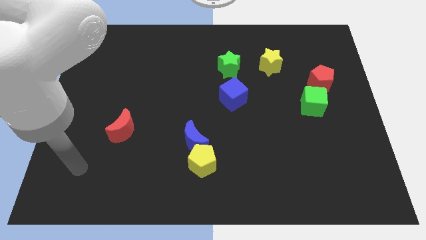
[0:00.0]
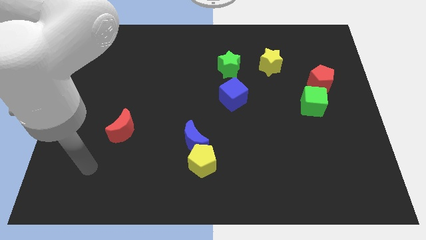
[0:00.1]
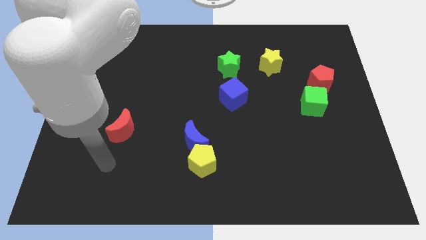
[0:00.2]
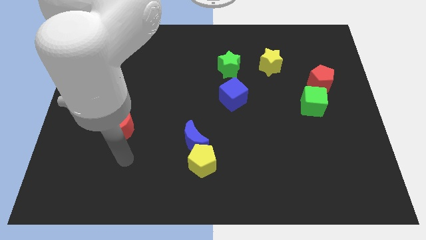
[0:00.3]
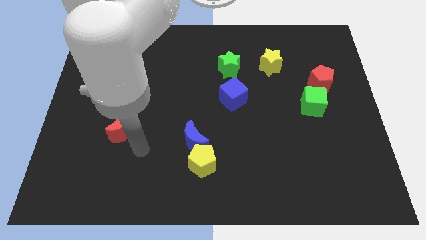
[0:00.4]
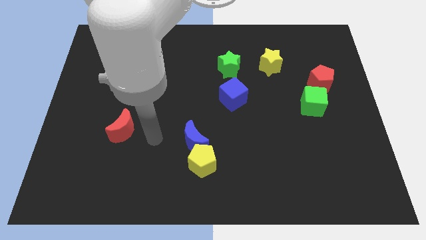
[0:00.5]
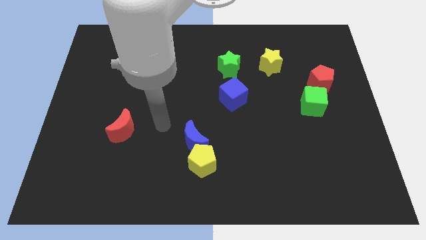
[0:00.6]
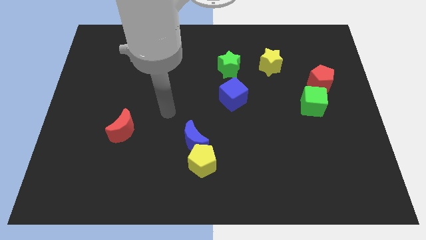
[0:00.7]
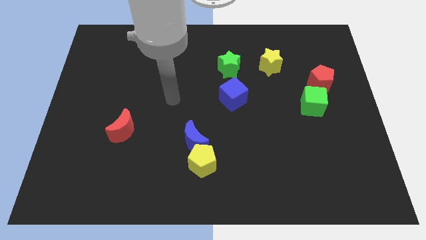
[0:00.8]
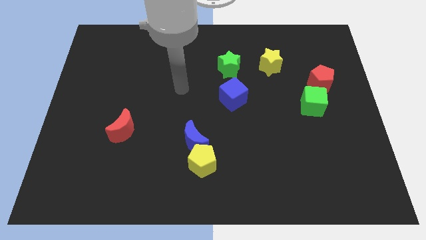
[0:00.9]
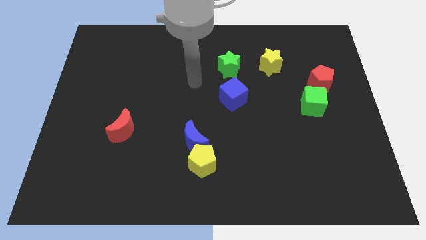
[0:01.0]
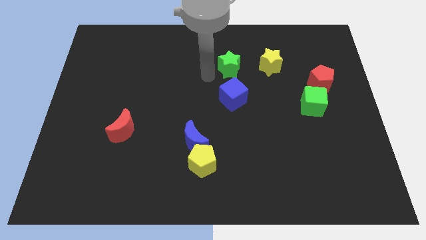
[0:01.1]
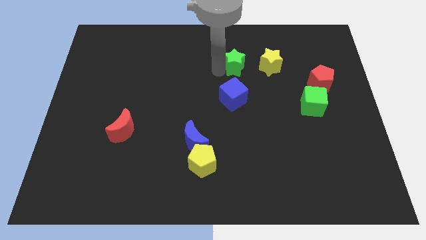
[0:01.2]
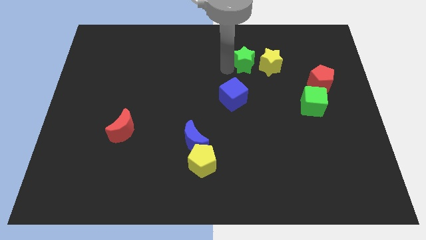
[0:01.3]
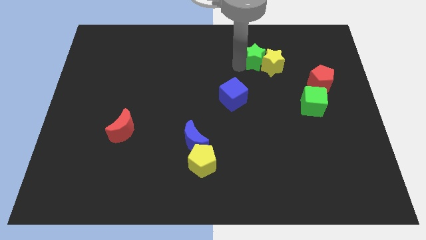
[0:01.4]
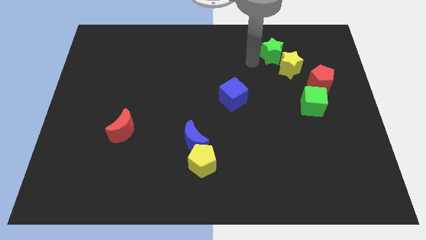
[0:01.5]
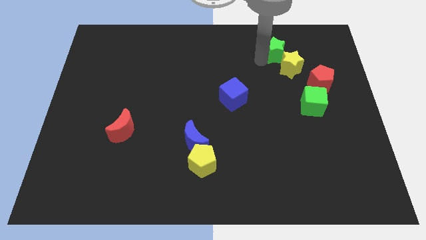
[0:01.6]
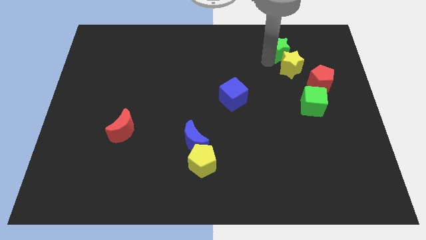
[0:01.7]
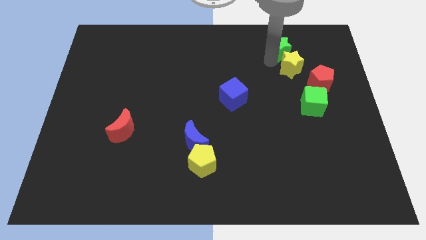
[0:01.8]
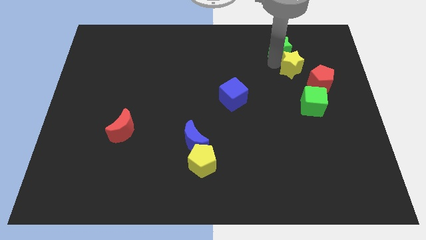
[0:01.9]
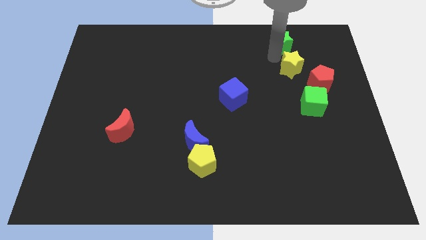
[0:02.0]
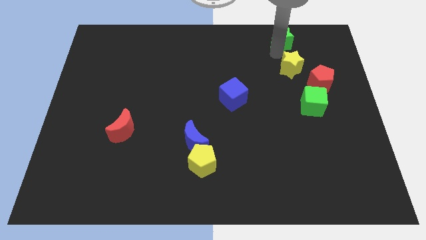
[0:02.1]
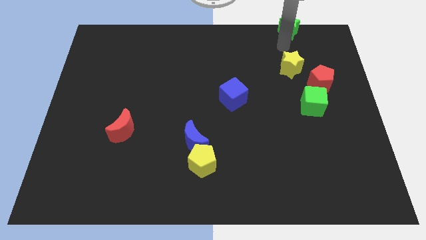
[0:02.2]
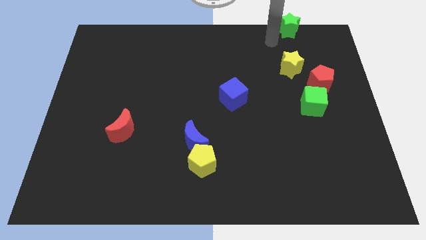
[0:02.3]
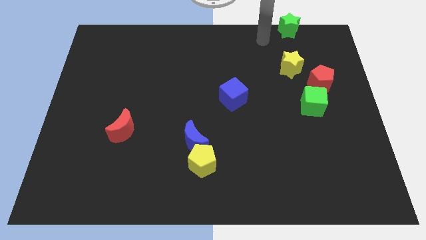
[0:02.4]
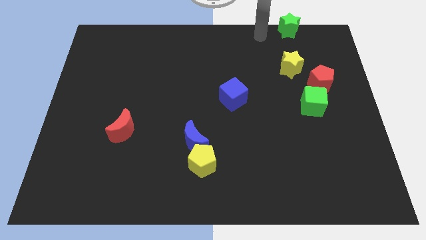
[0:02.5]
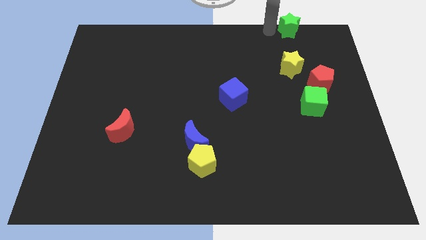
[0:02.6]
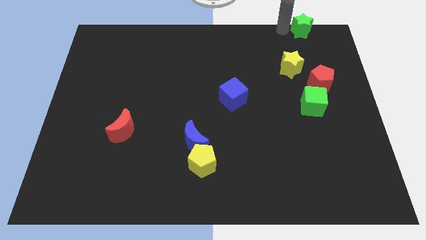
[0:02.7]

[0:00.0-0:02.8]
place the green star at the top right side

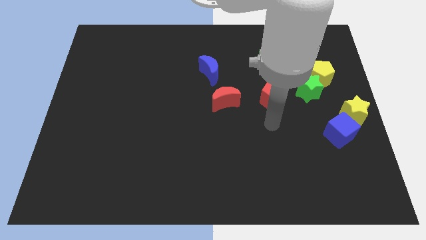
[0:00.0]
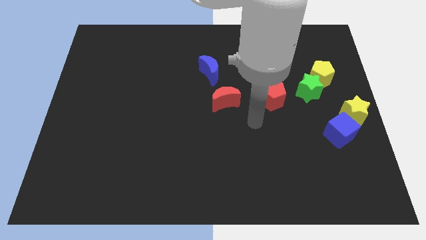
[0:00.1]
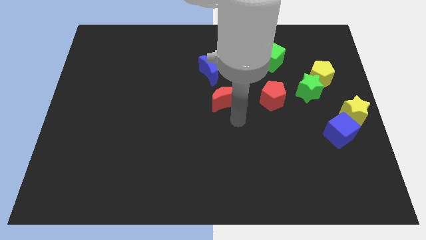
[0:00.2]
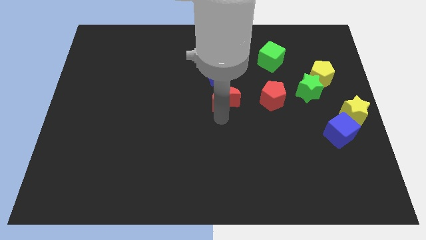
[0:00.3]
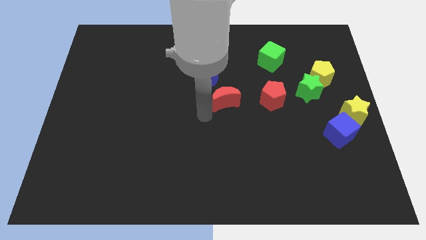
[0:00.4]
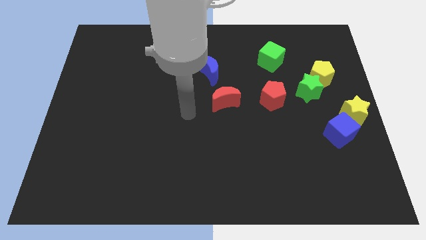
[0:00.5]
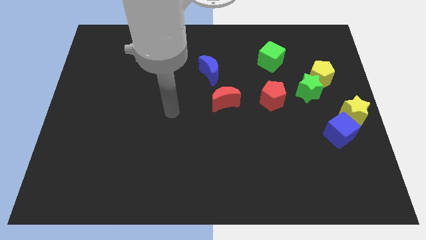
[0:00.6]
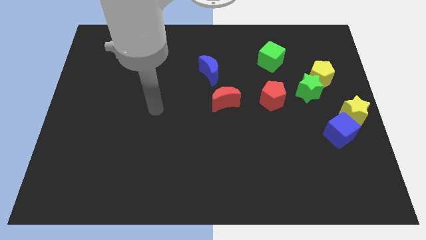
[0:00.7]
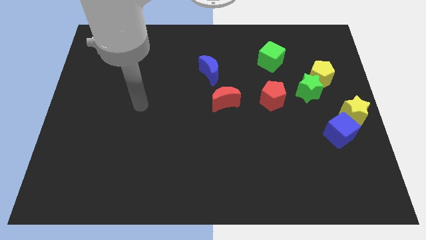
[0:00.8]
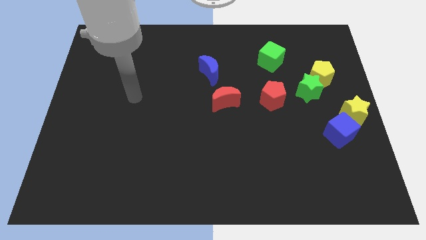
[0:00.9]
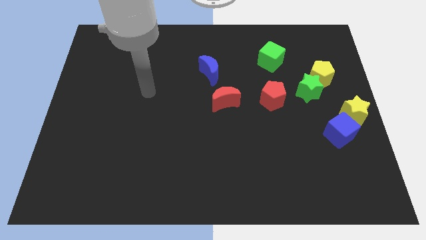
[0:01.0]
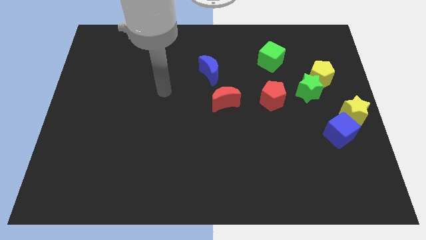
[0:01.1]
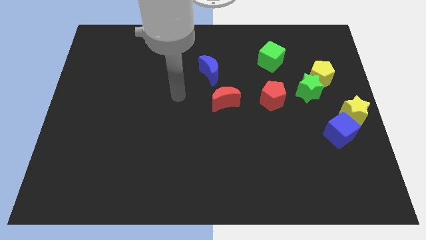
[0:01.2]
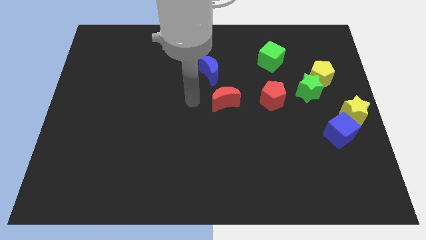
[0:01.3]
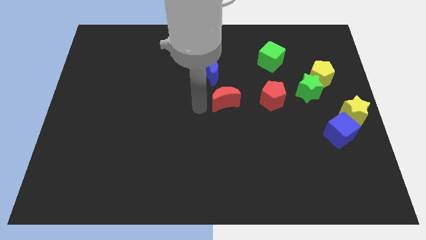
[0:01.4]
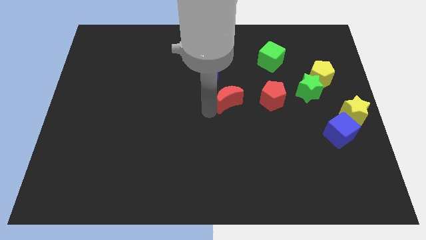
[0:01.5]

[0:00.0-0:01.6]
move the arm to the red crescent

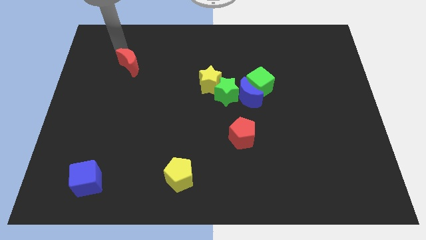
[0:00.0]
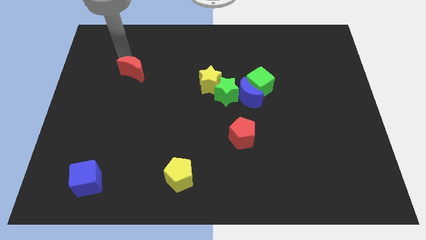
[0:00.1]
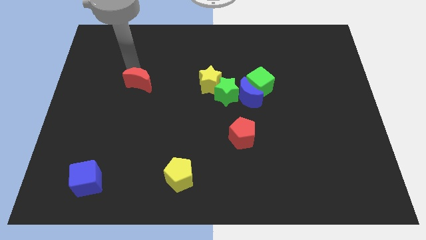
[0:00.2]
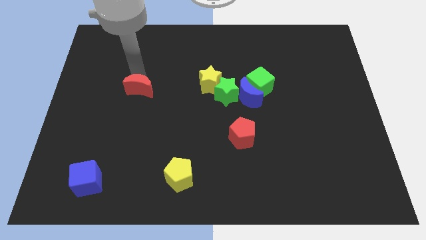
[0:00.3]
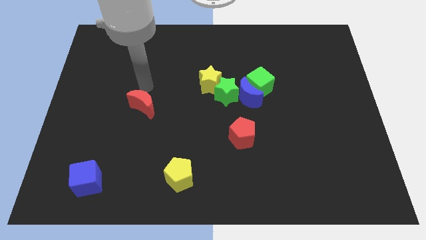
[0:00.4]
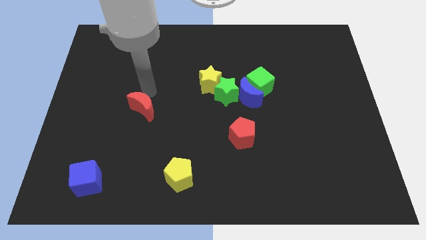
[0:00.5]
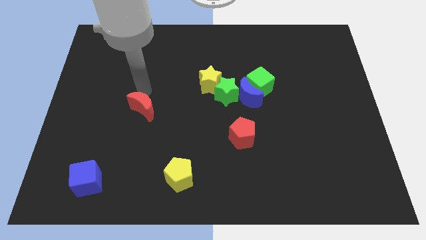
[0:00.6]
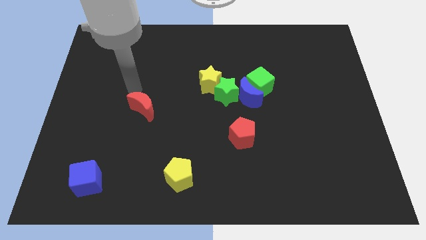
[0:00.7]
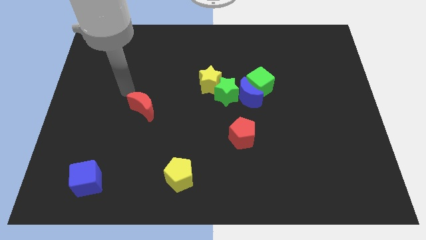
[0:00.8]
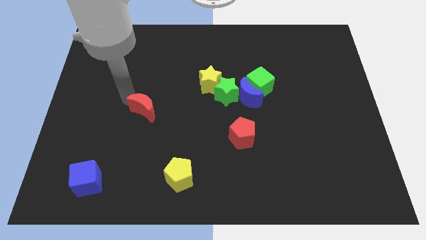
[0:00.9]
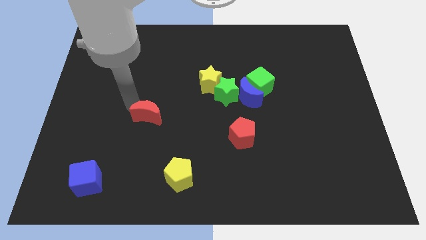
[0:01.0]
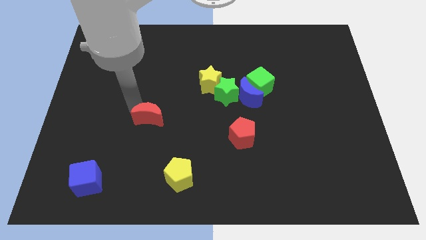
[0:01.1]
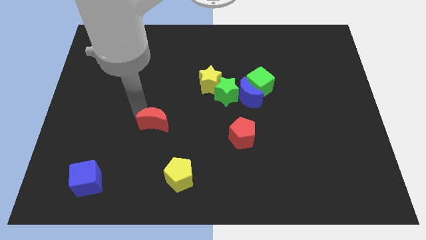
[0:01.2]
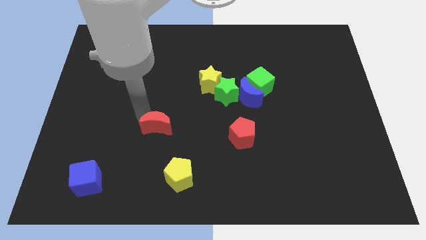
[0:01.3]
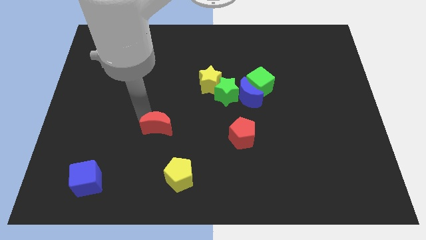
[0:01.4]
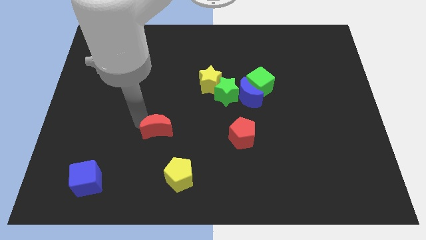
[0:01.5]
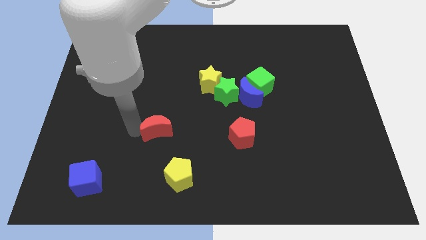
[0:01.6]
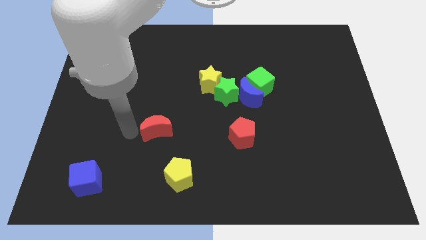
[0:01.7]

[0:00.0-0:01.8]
move the red crescent towards the top side of the yellow pentagon

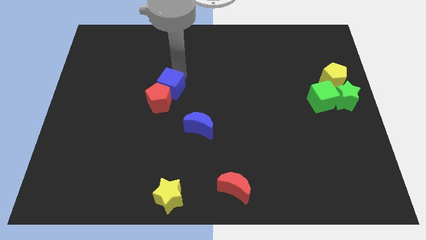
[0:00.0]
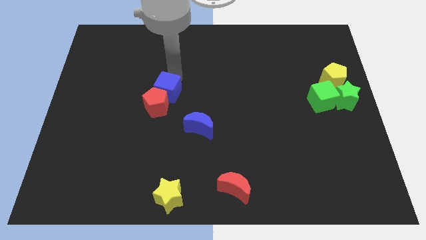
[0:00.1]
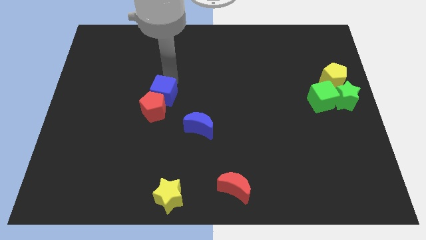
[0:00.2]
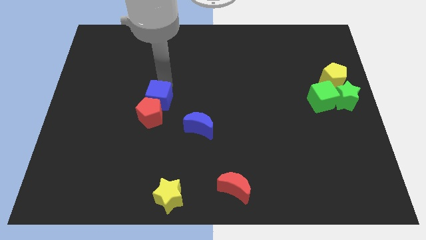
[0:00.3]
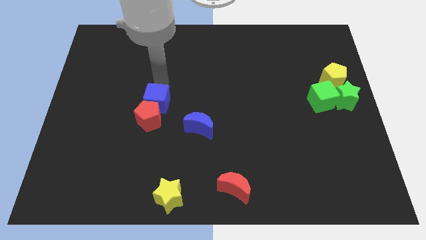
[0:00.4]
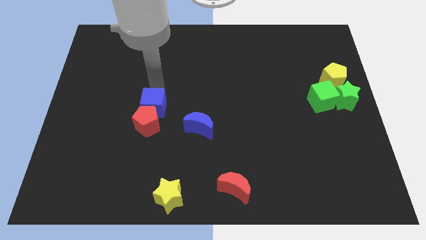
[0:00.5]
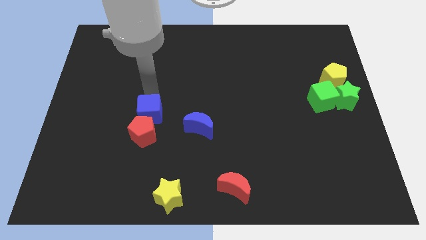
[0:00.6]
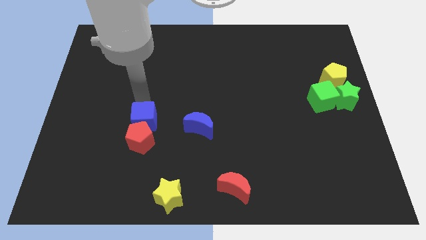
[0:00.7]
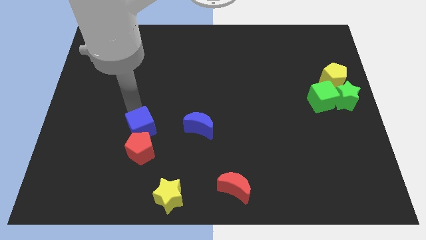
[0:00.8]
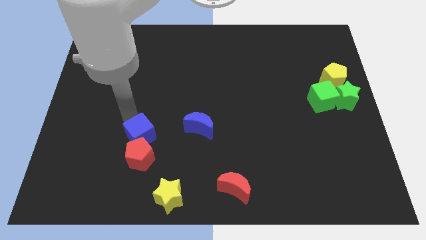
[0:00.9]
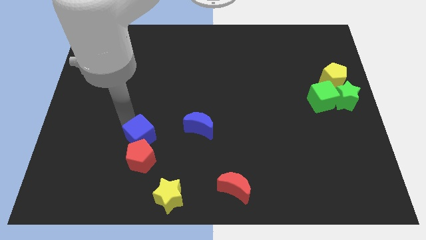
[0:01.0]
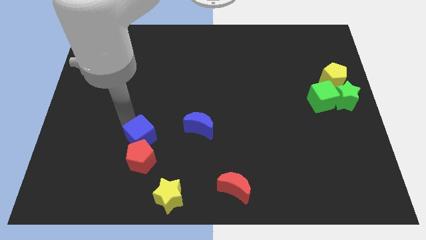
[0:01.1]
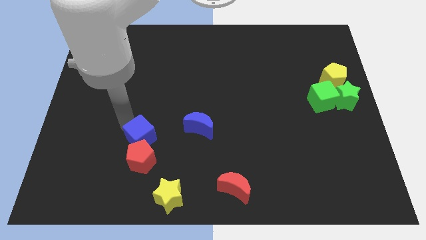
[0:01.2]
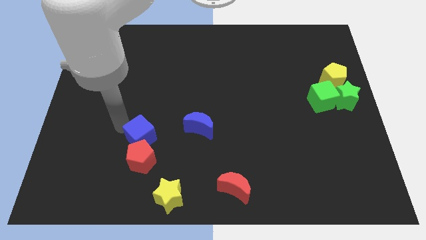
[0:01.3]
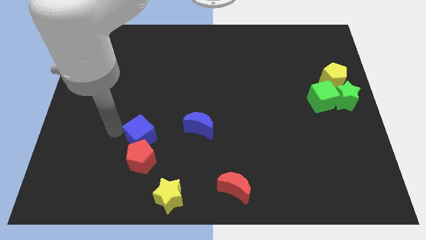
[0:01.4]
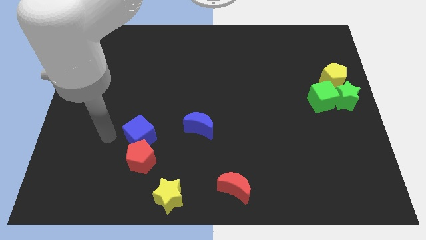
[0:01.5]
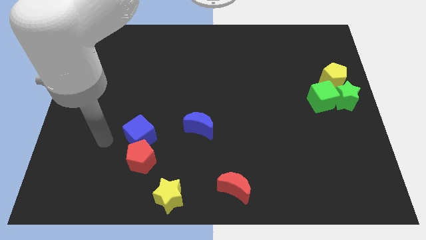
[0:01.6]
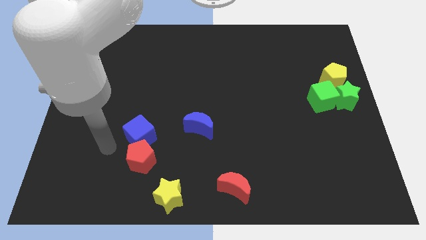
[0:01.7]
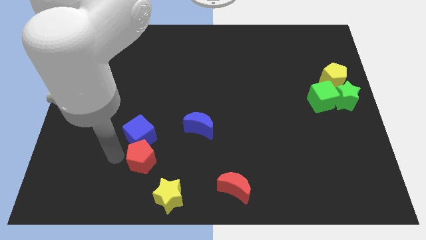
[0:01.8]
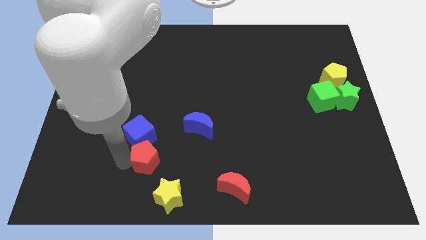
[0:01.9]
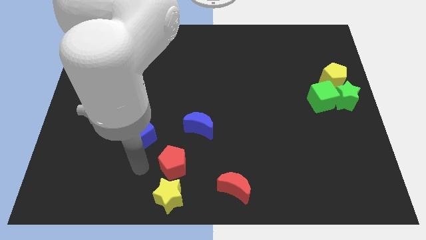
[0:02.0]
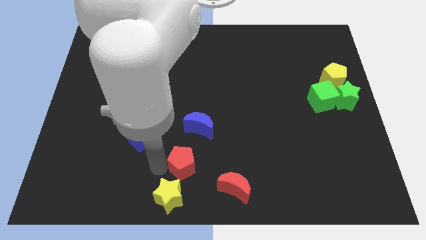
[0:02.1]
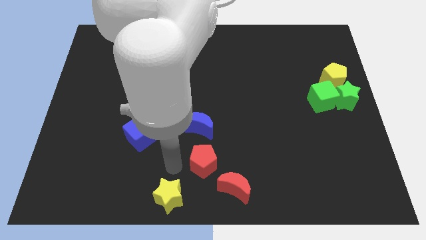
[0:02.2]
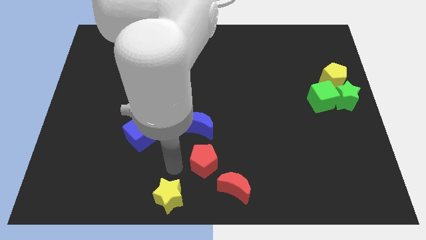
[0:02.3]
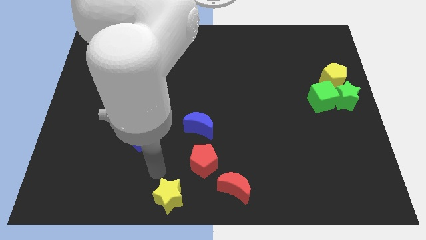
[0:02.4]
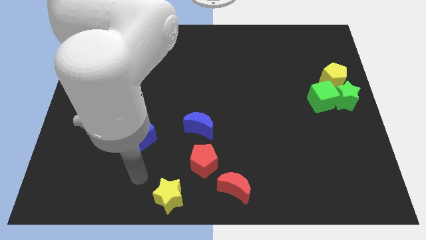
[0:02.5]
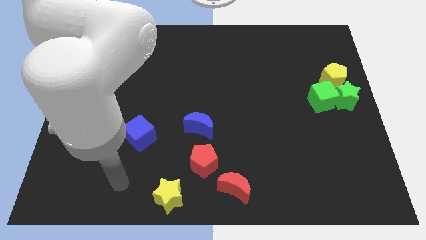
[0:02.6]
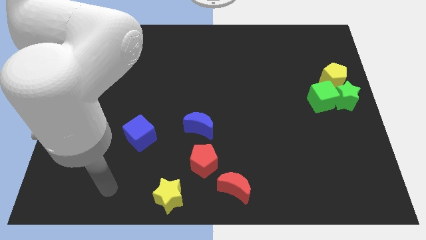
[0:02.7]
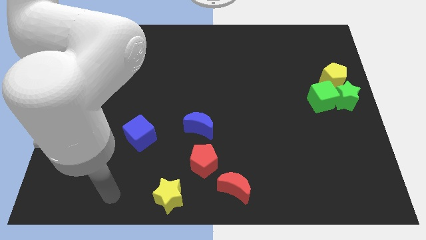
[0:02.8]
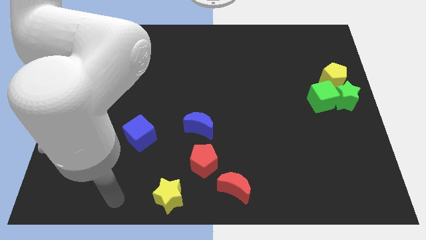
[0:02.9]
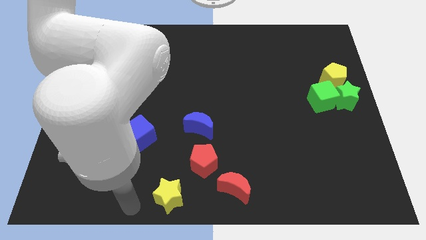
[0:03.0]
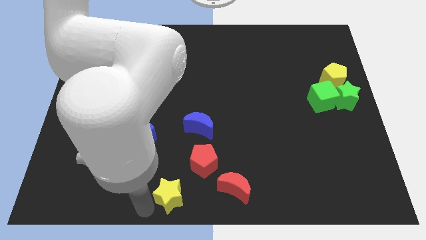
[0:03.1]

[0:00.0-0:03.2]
separate red pentagon from the blue cube
